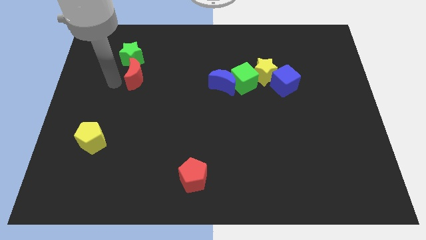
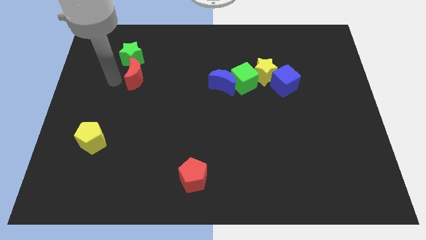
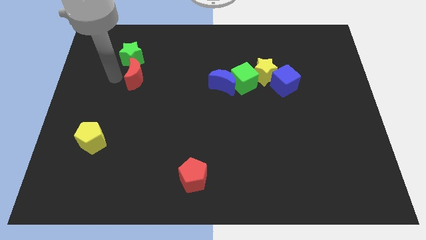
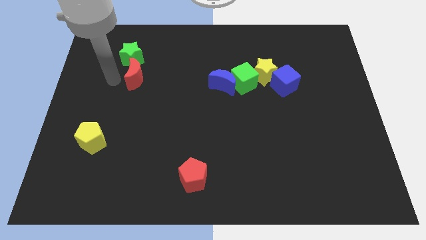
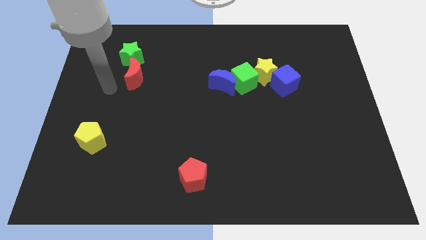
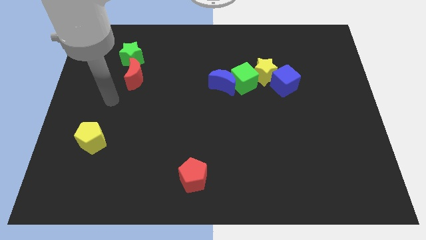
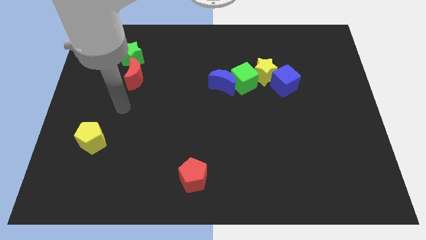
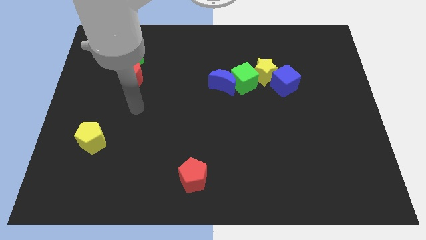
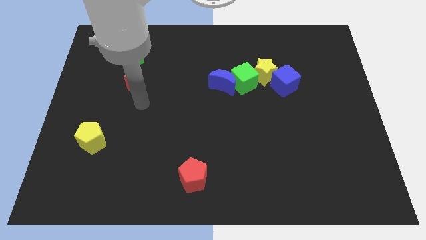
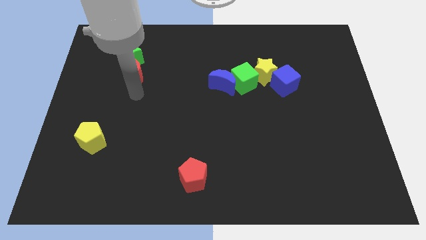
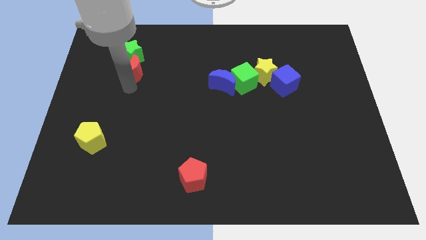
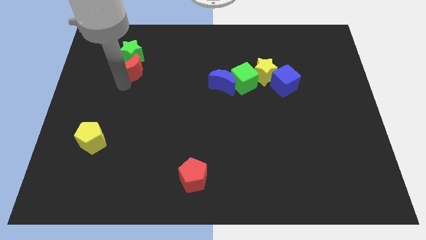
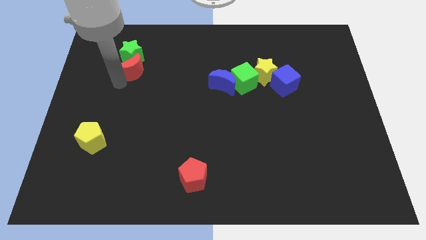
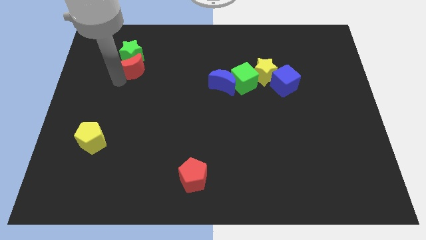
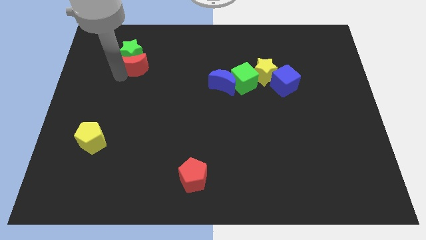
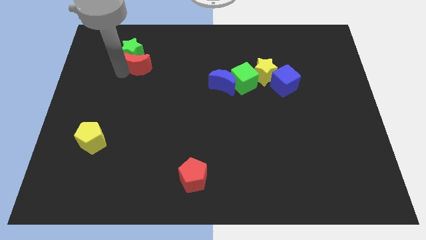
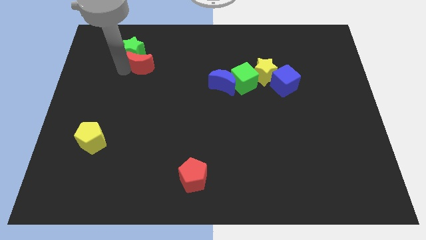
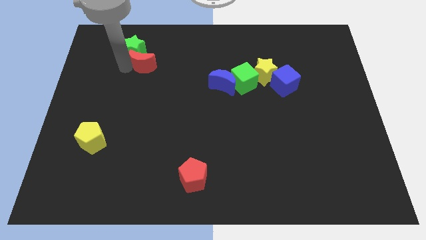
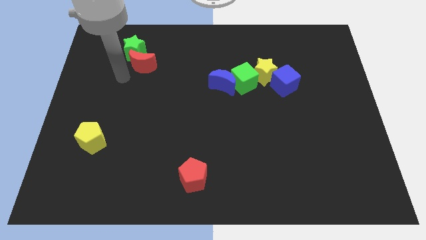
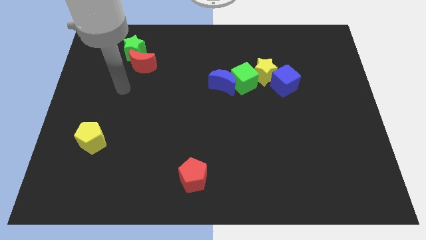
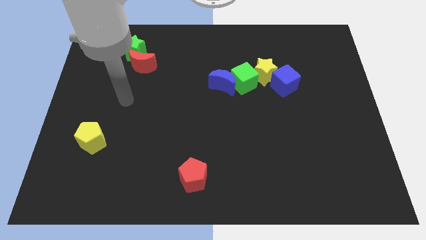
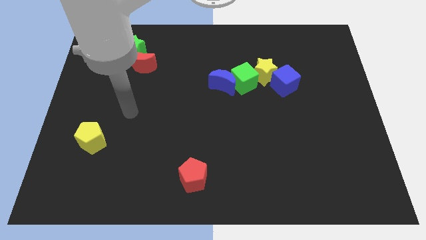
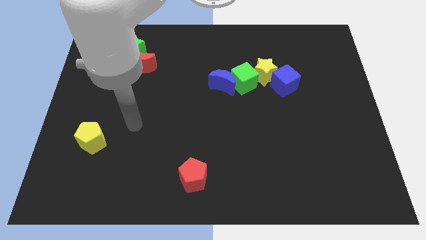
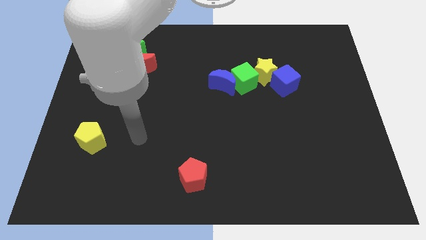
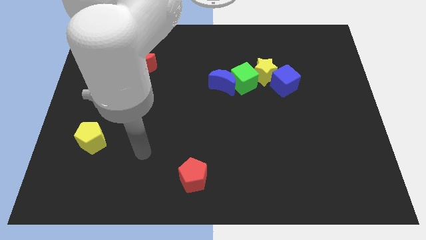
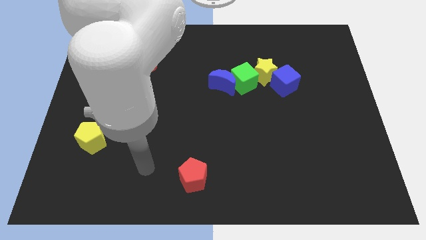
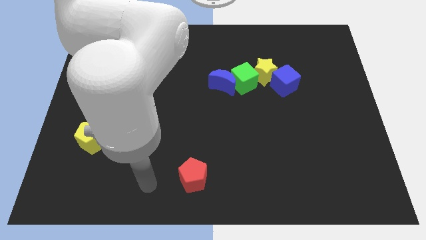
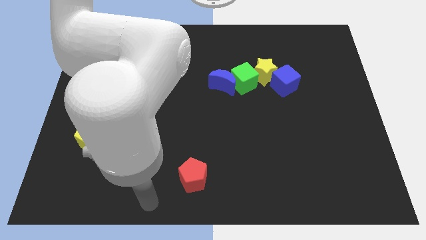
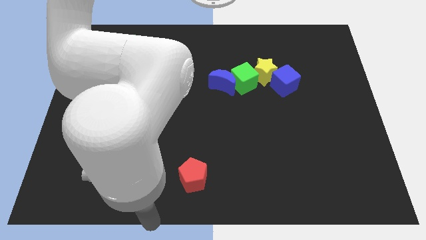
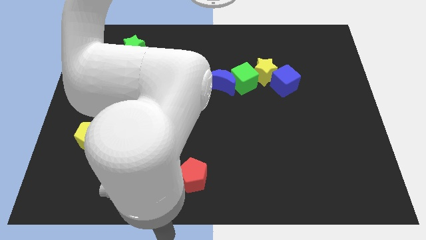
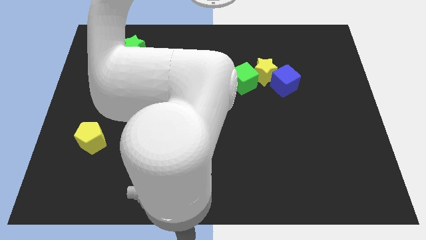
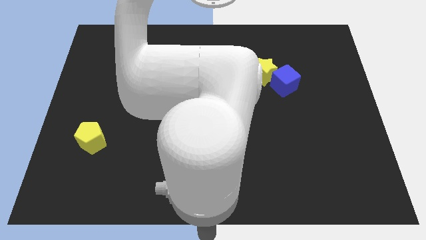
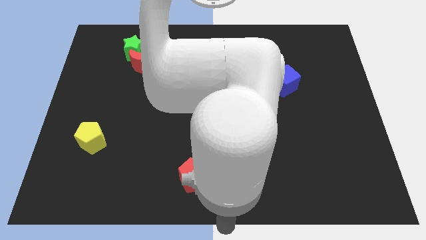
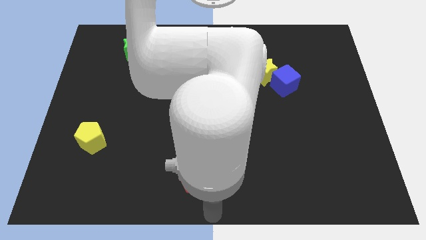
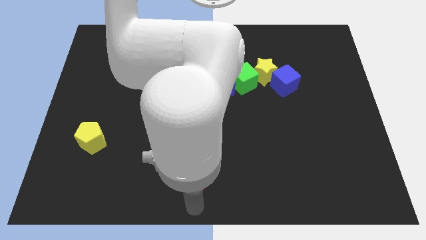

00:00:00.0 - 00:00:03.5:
move the arm away from the red moon

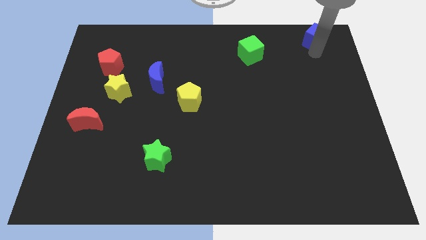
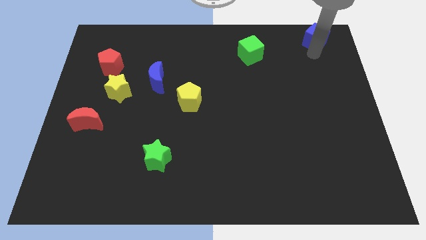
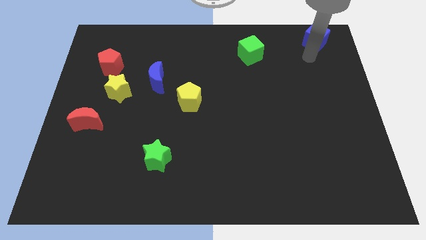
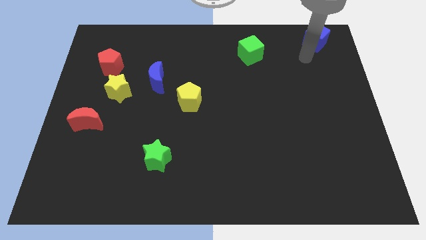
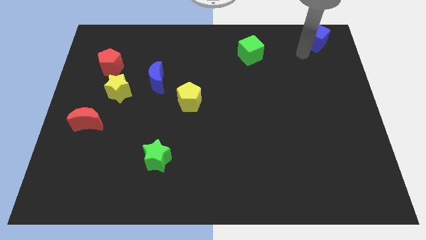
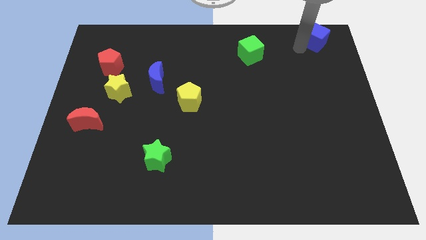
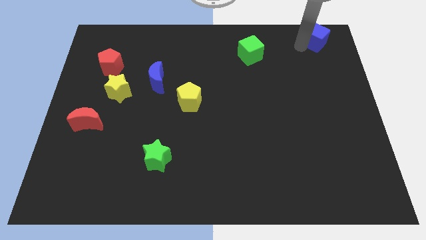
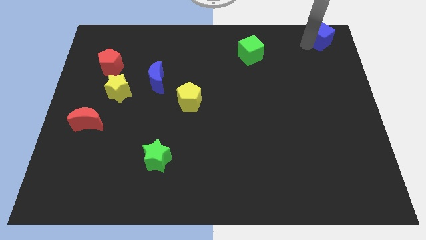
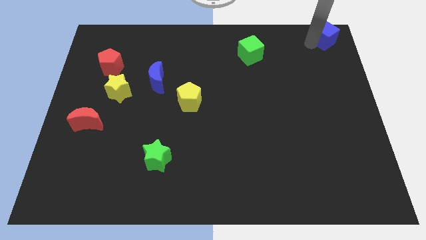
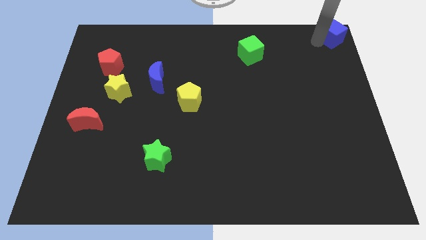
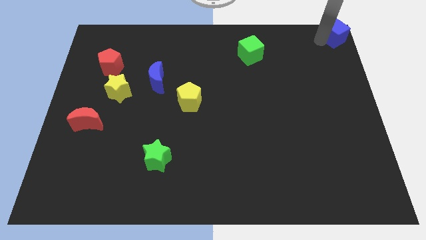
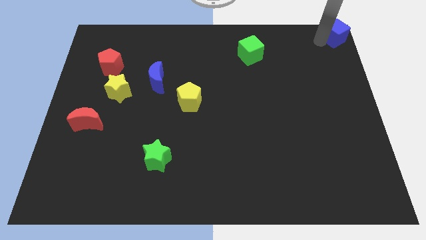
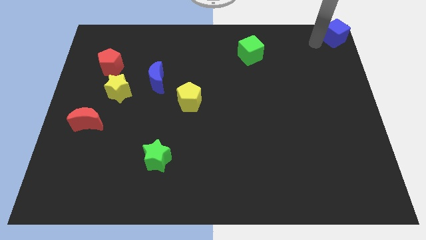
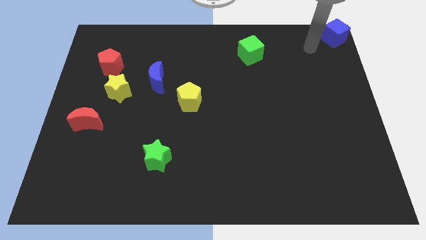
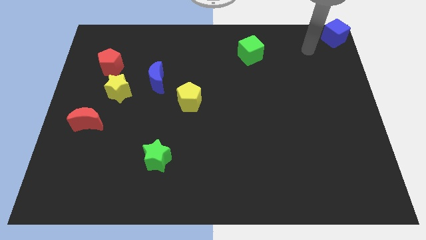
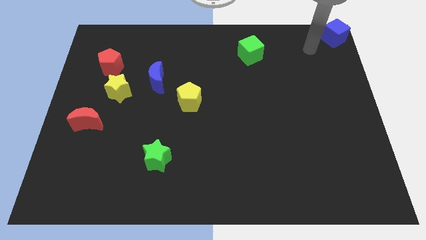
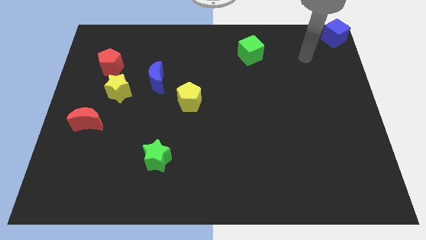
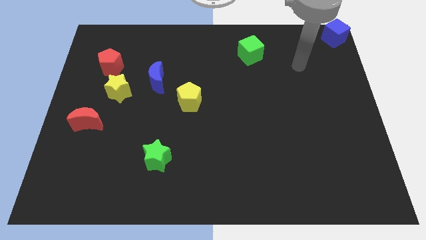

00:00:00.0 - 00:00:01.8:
slightly move the blue cube to the top right side of the board

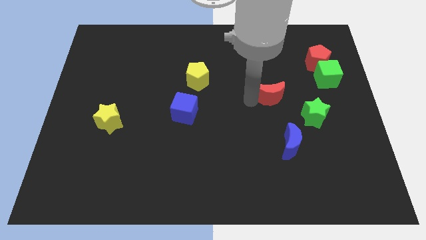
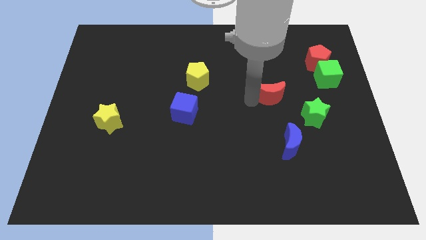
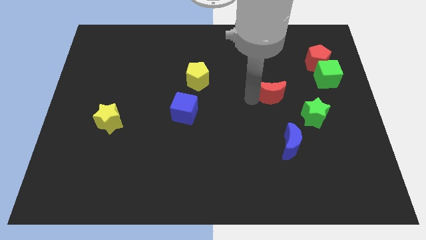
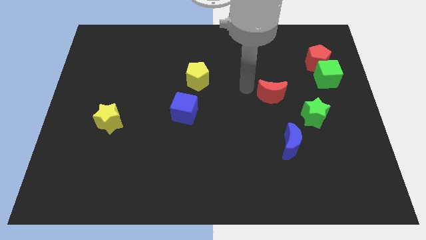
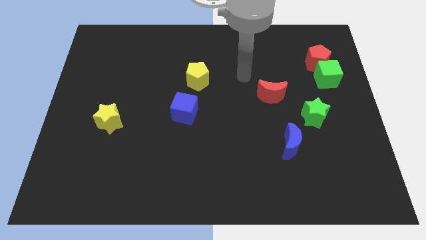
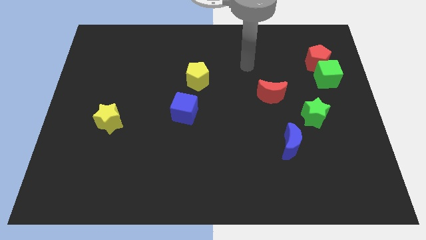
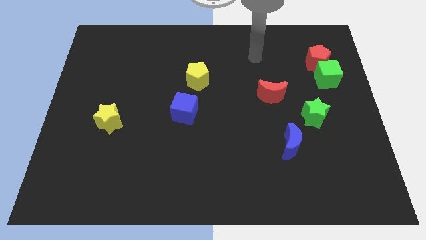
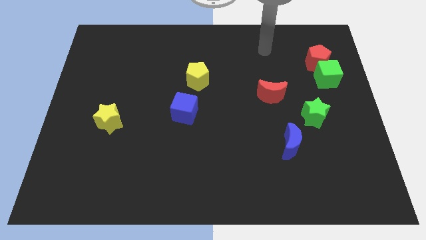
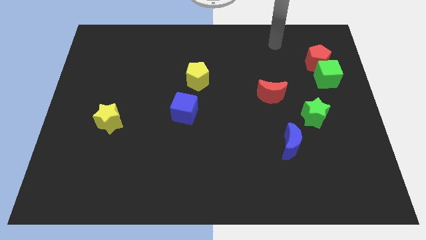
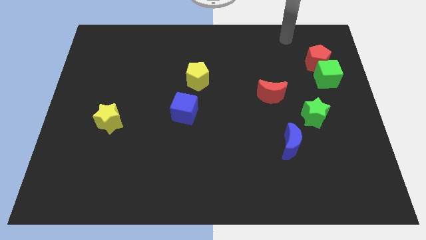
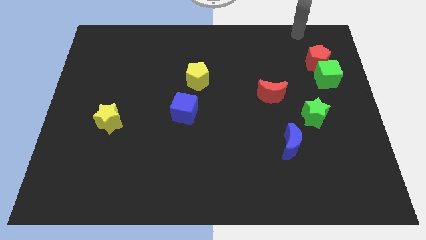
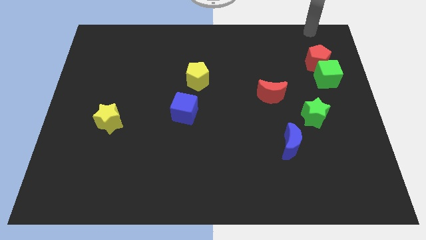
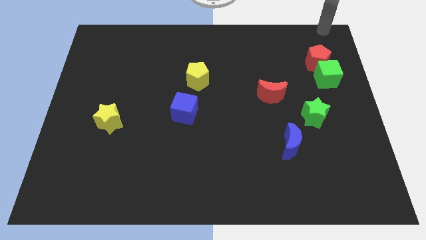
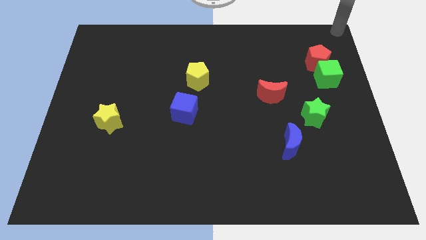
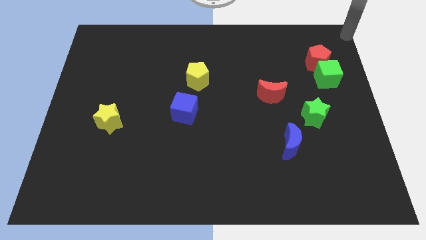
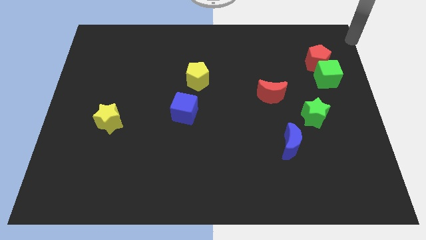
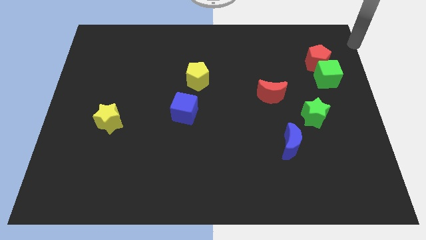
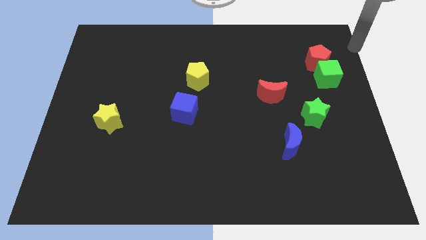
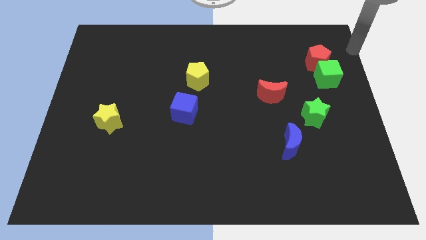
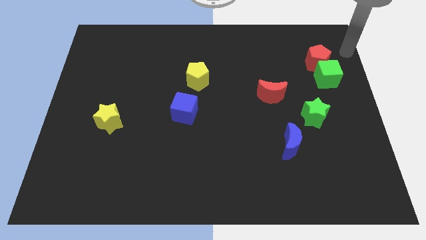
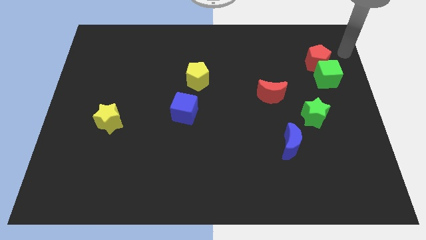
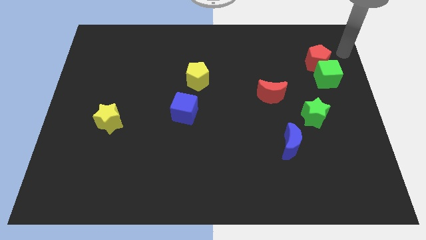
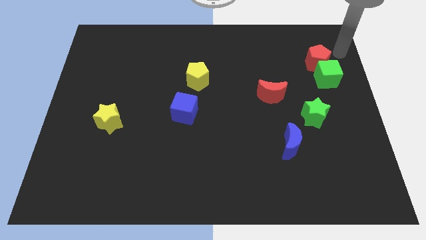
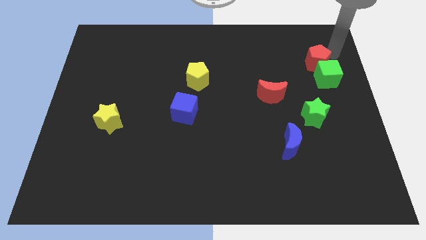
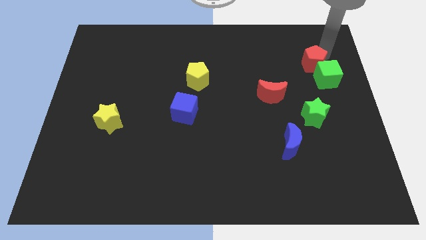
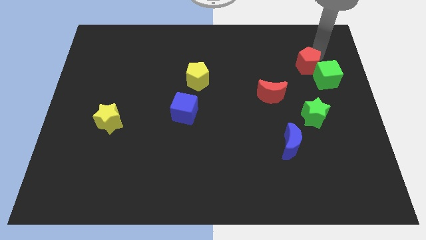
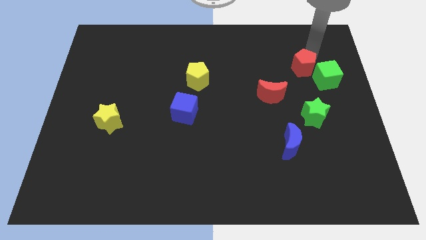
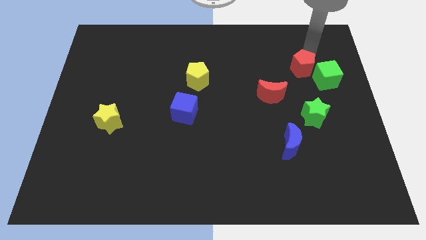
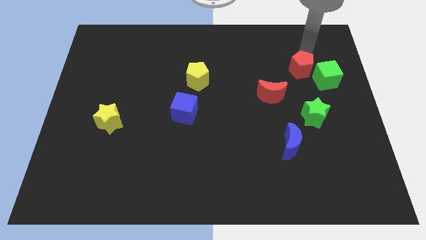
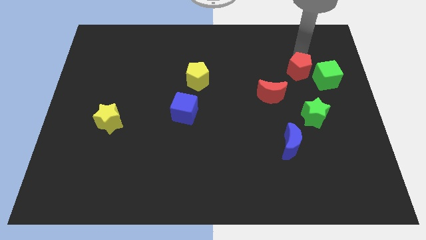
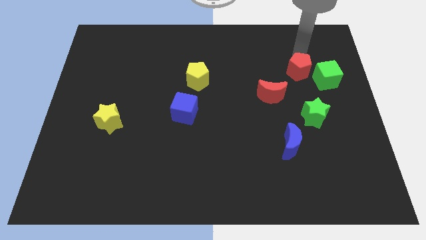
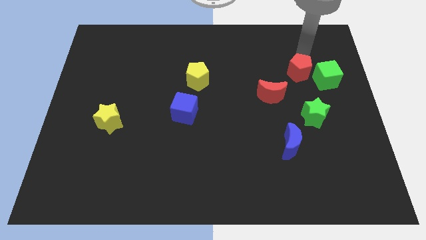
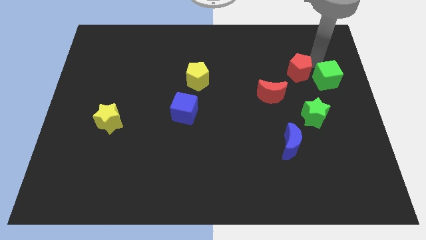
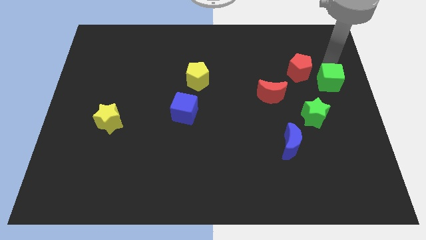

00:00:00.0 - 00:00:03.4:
separate the red pentagon from the green cube

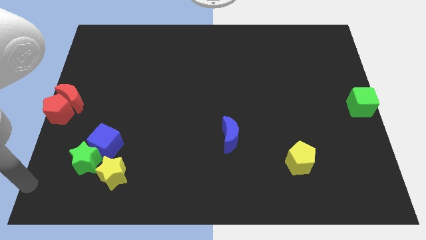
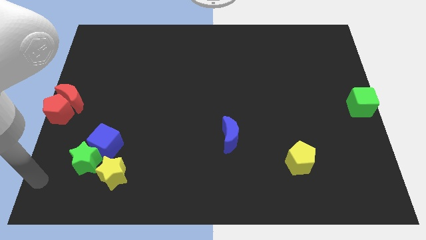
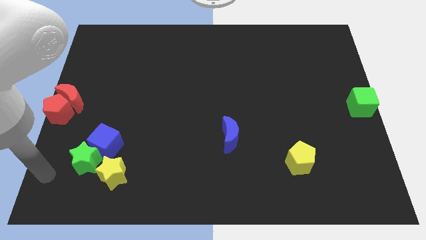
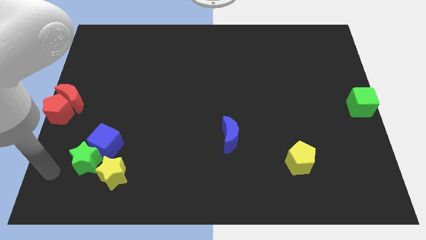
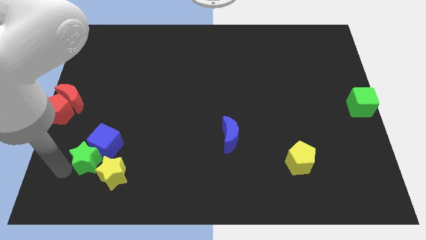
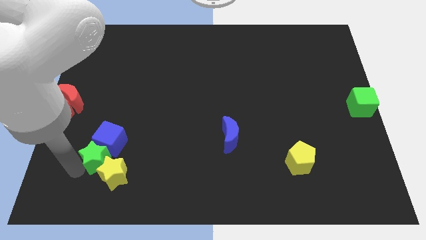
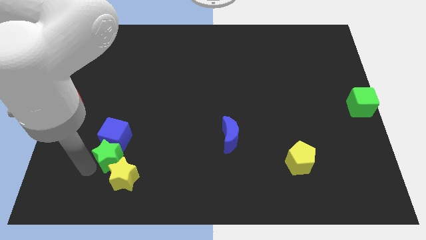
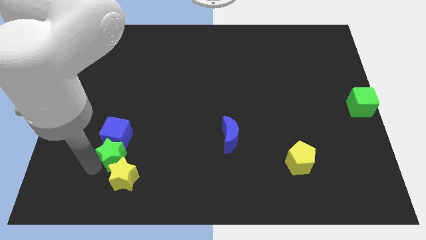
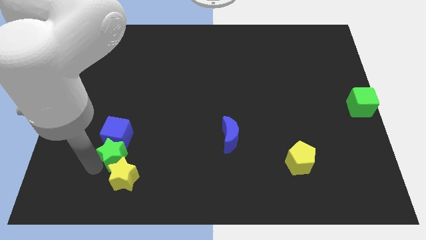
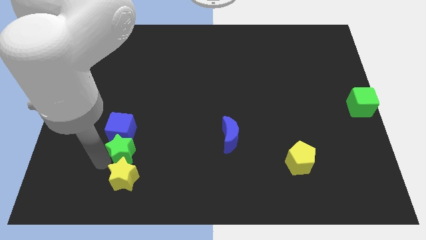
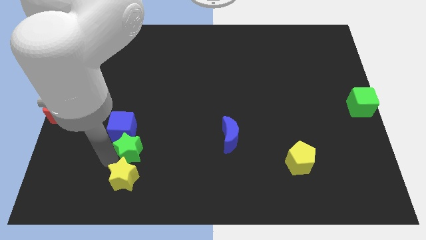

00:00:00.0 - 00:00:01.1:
place the green star in between the blue cube and the yellow star
